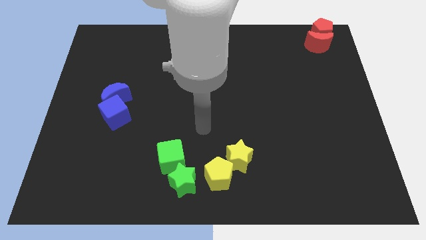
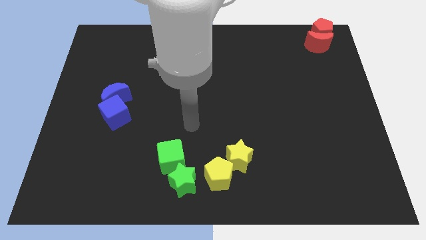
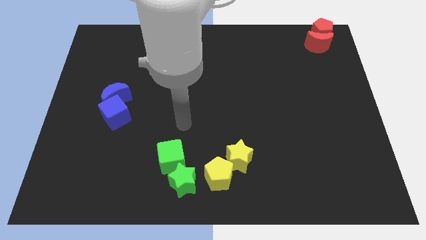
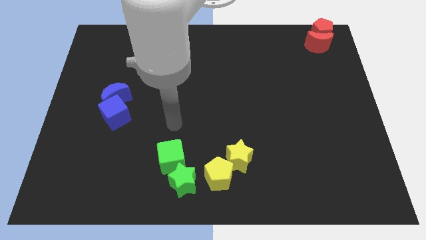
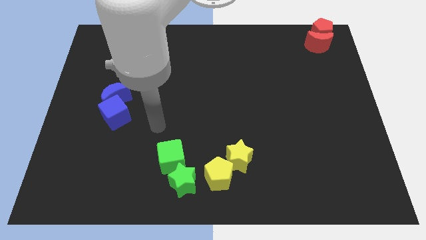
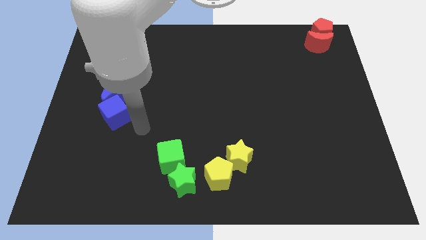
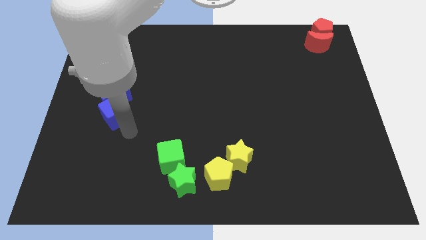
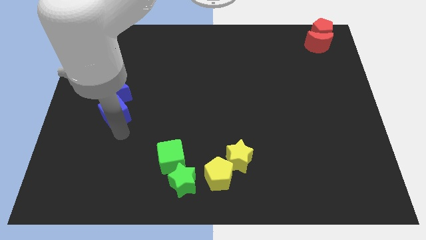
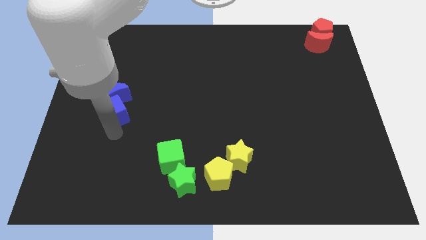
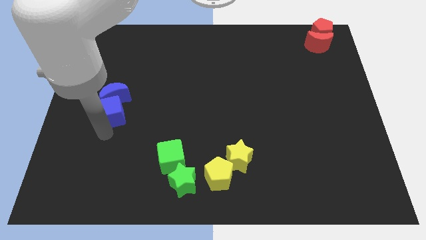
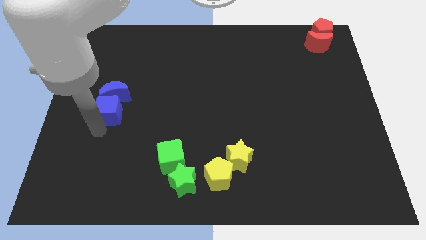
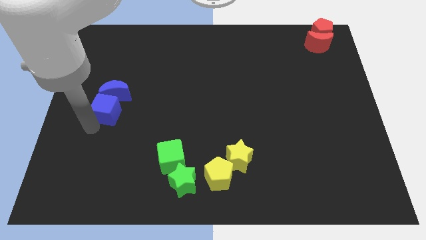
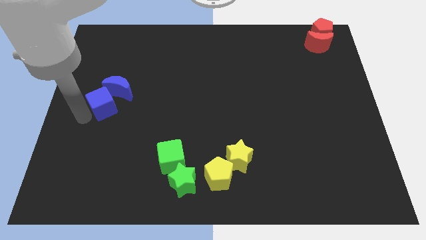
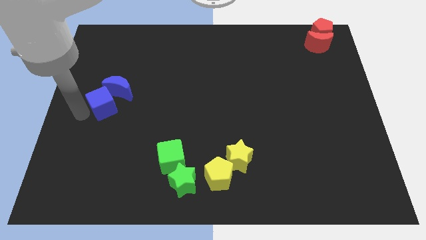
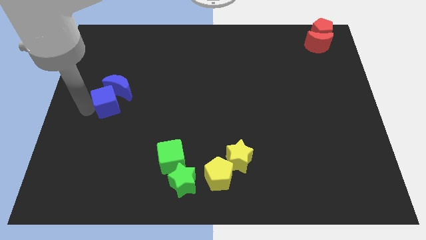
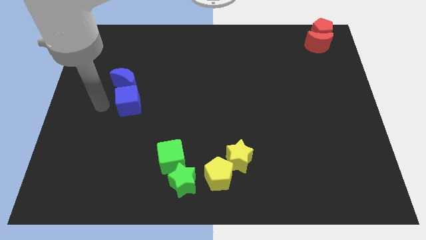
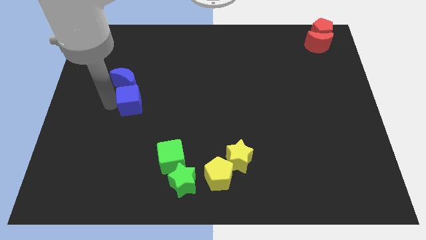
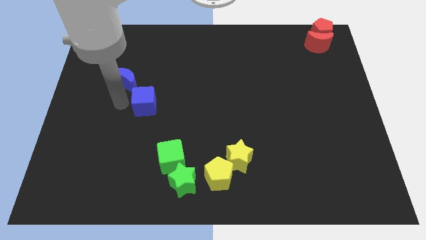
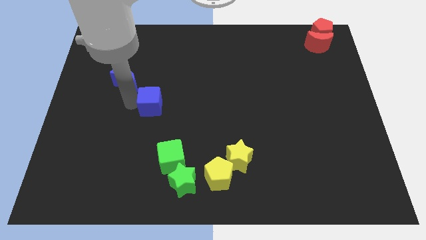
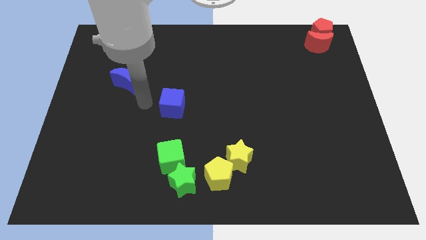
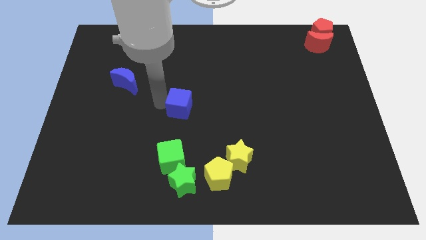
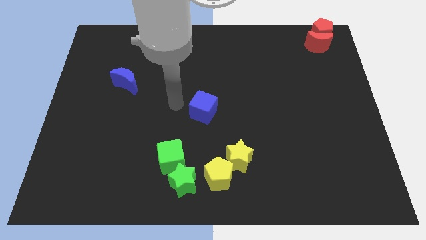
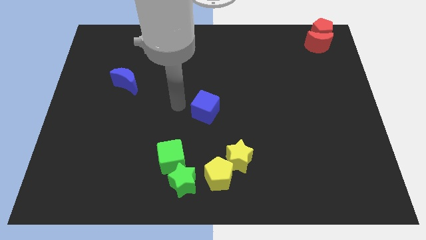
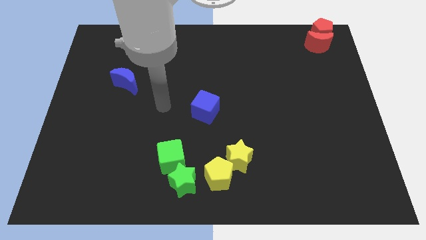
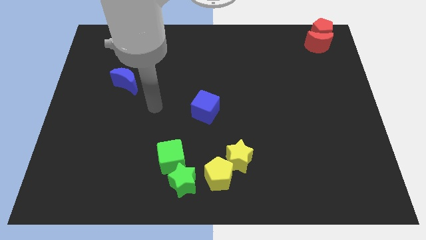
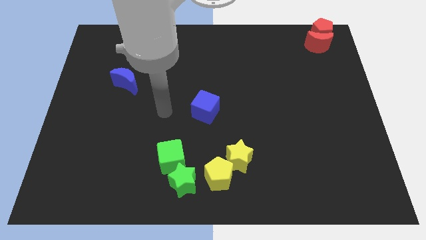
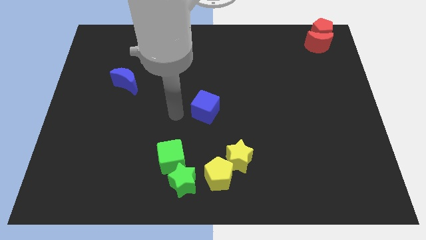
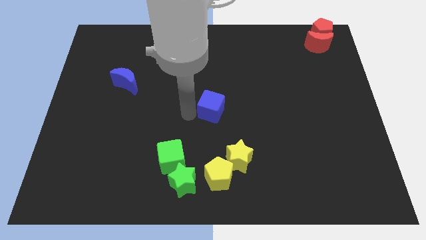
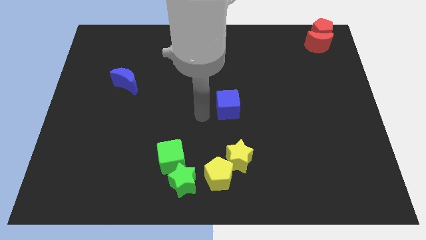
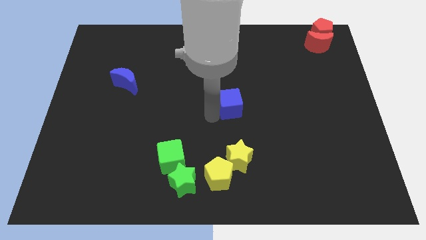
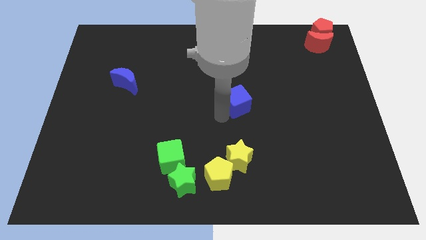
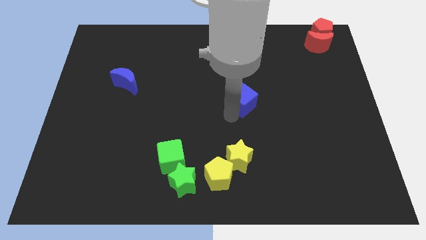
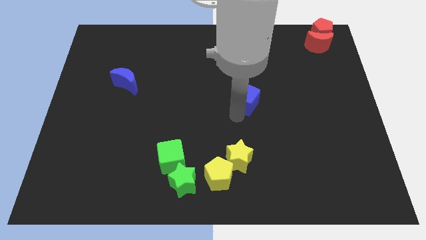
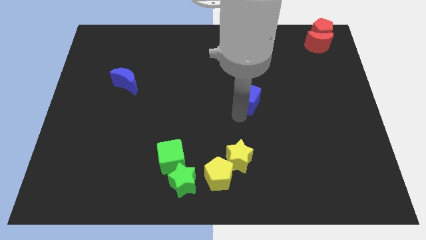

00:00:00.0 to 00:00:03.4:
move the blue cube to the top of the yellow star

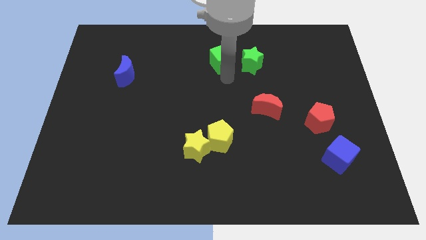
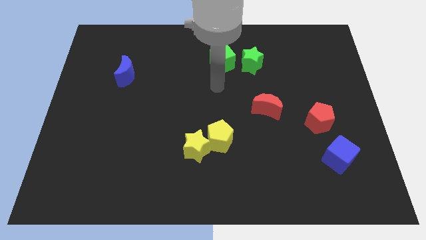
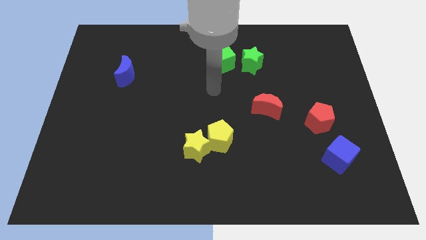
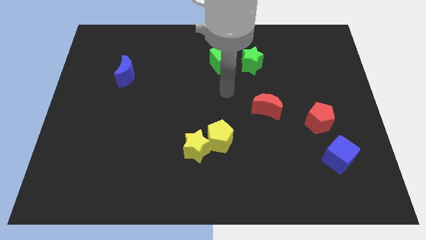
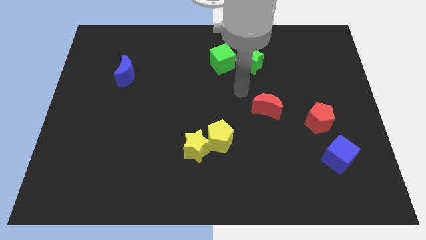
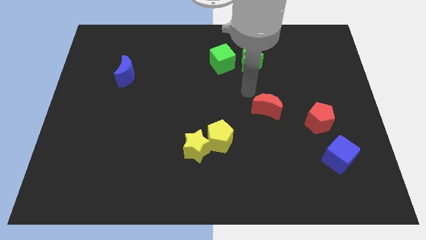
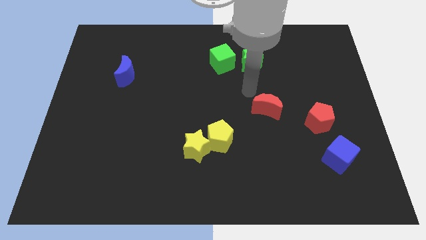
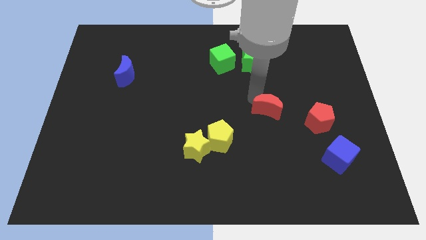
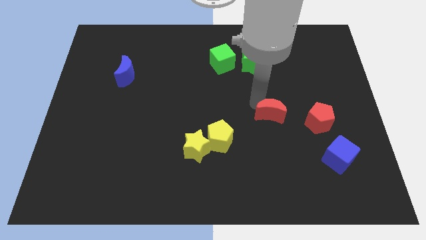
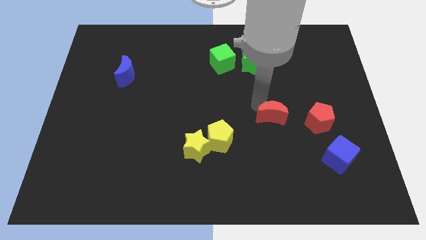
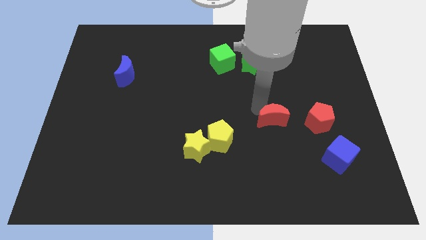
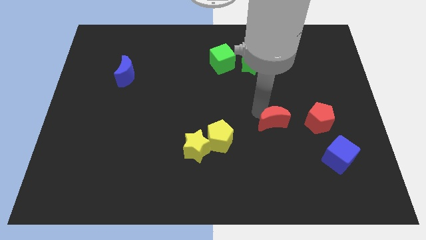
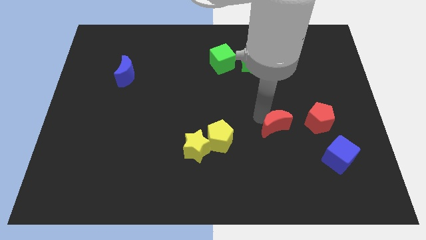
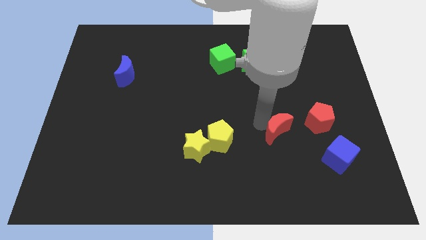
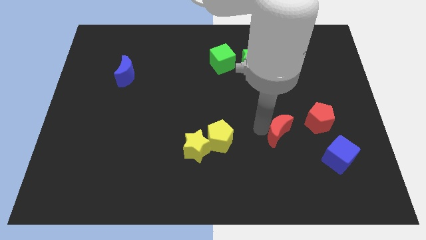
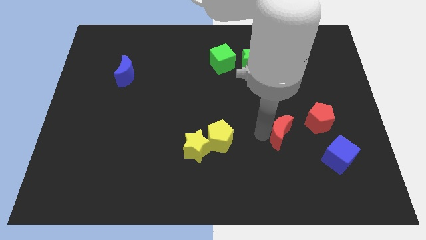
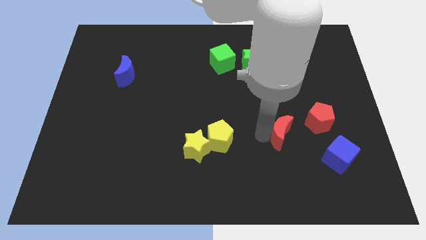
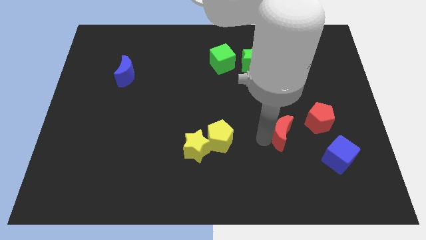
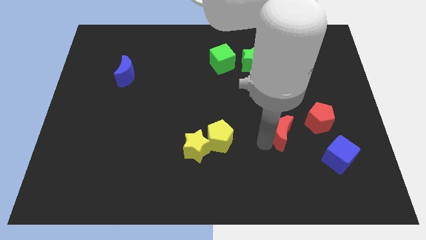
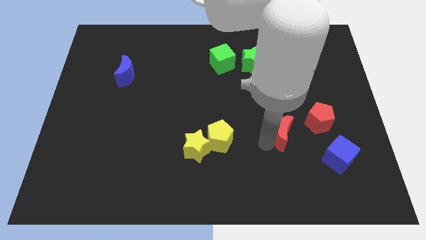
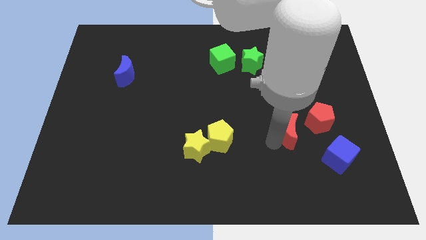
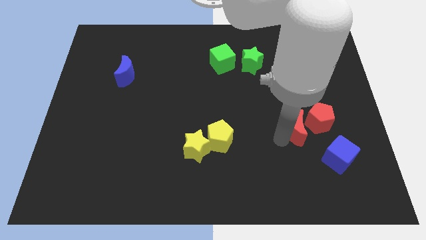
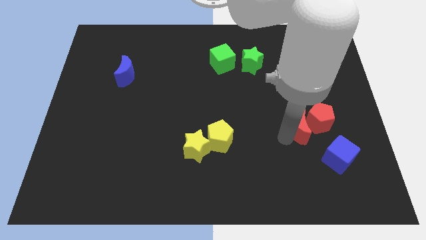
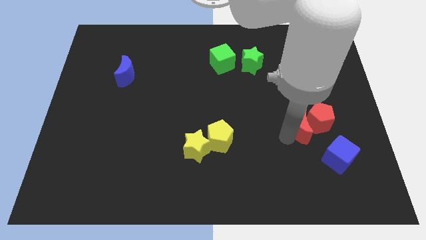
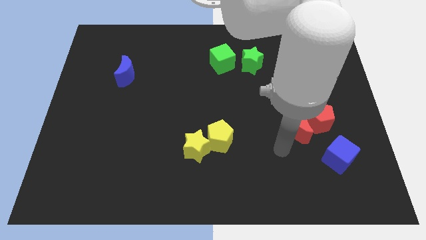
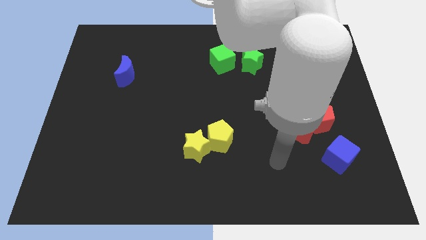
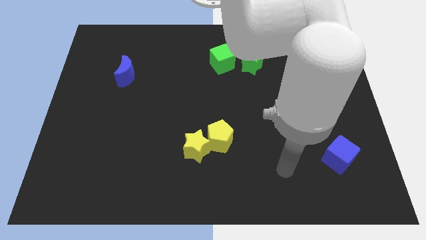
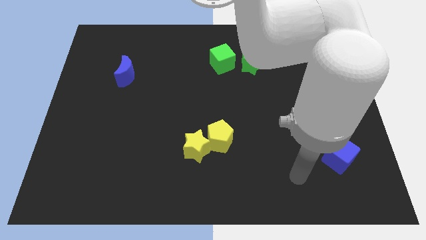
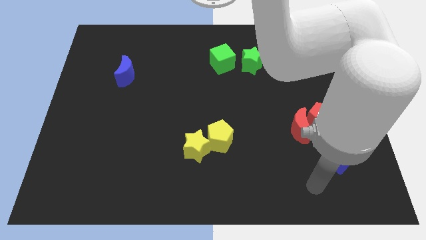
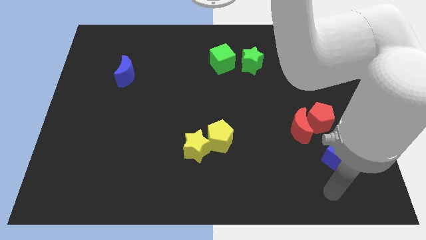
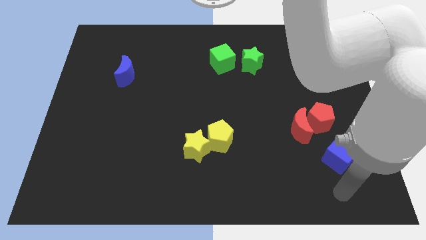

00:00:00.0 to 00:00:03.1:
add red moon close to red pentagon

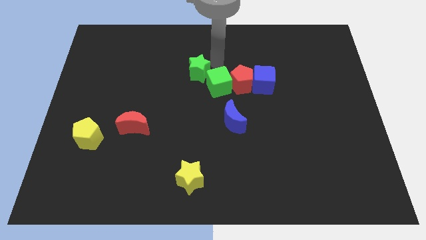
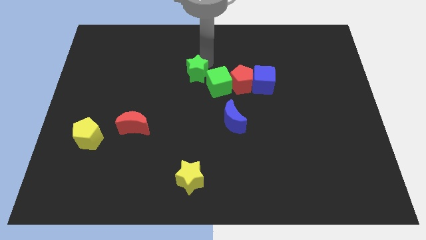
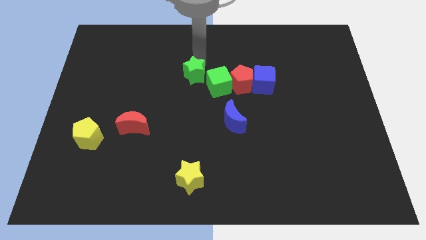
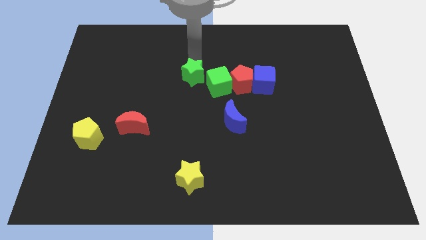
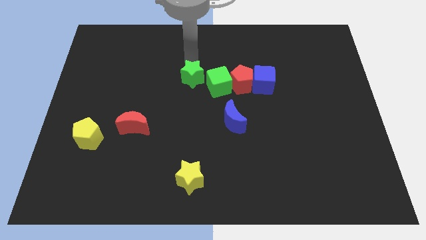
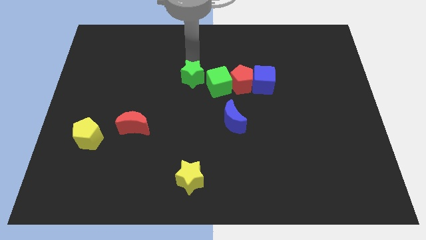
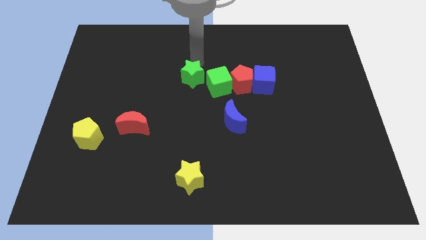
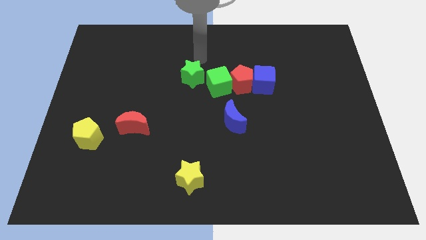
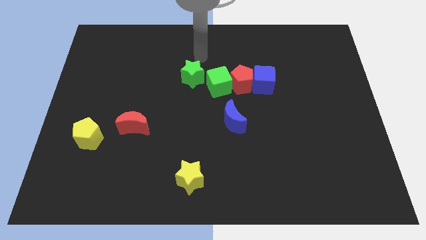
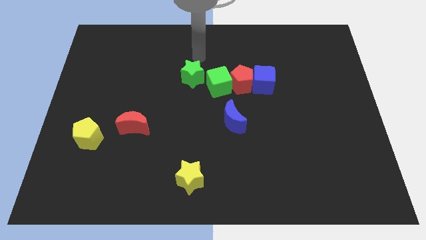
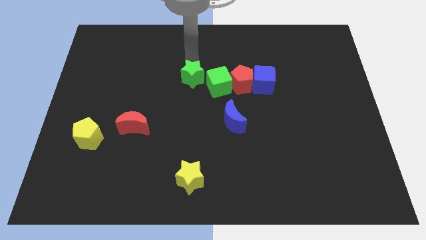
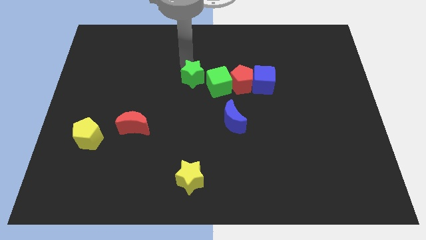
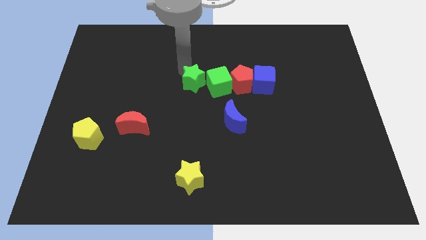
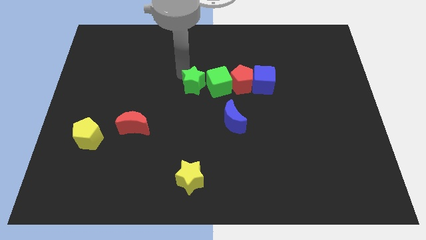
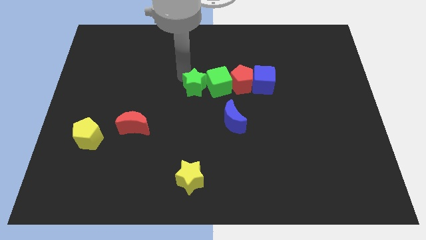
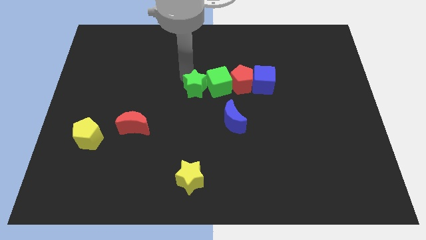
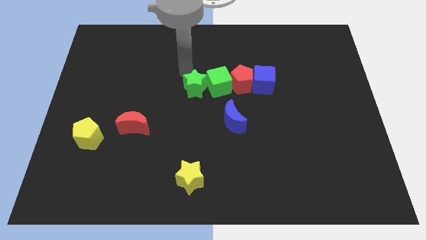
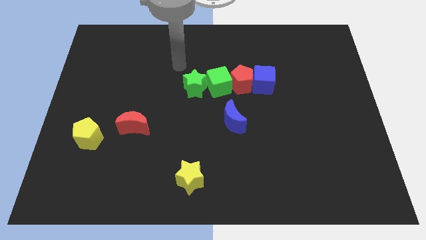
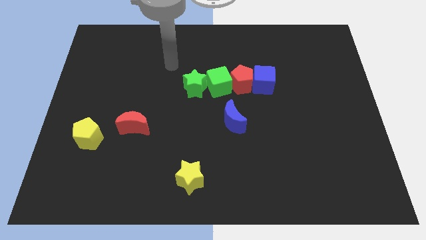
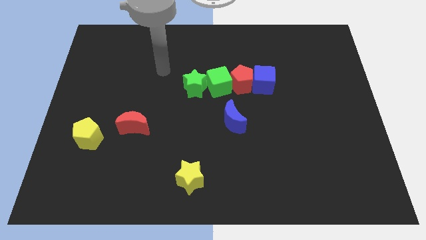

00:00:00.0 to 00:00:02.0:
place green star to the left of green cube

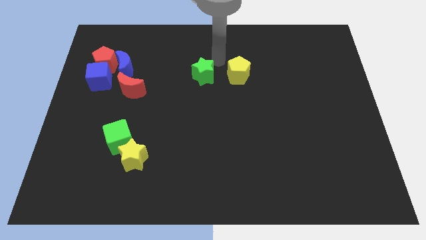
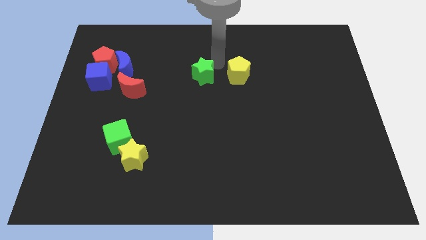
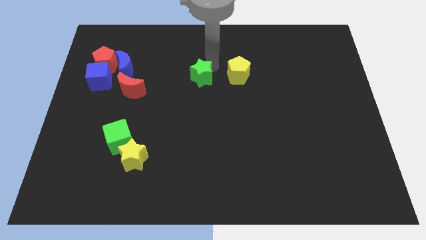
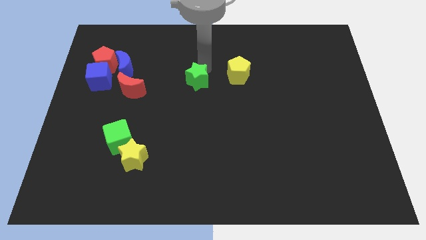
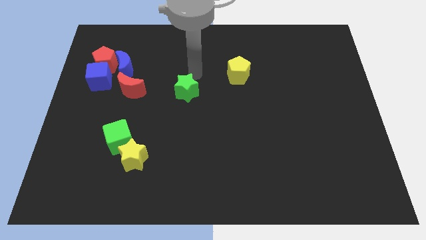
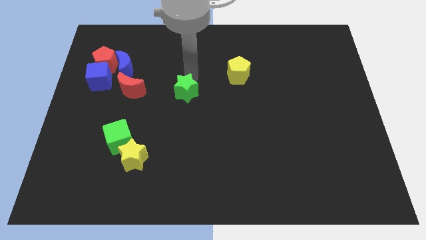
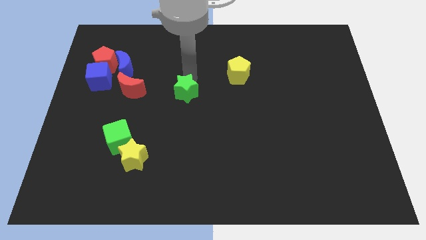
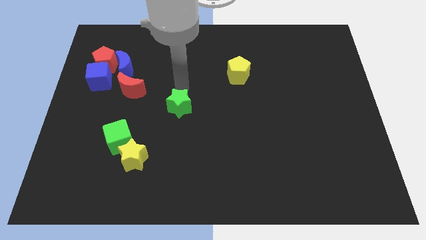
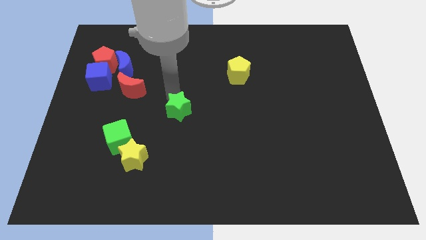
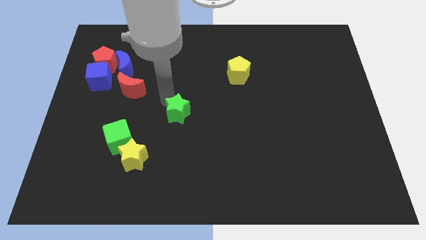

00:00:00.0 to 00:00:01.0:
place green star diagonally towards yellow star
